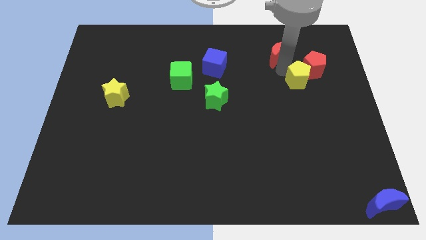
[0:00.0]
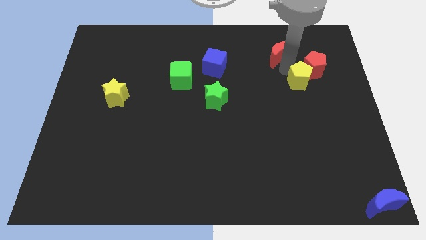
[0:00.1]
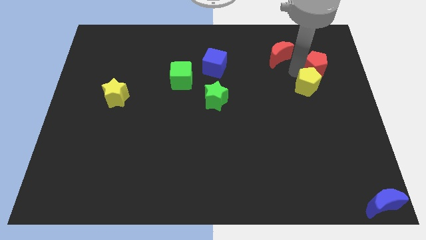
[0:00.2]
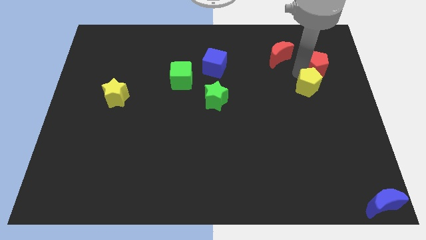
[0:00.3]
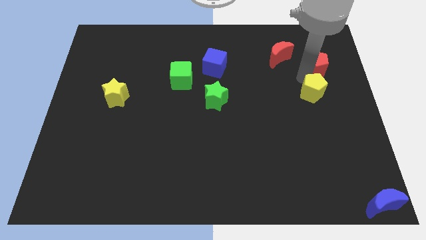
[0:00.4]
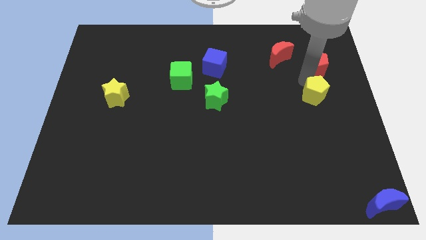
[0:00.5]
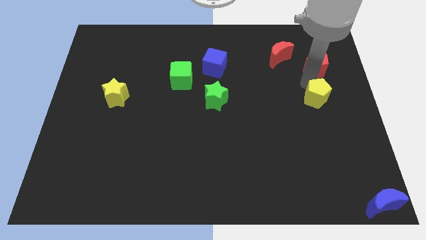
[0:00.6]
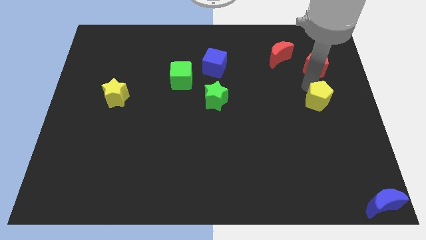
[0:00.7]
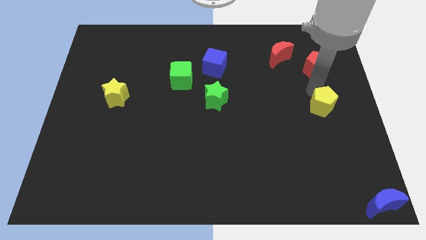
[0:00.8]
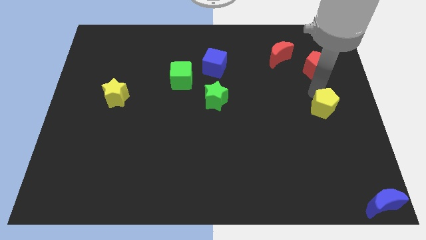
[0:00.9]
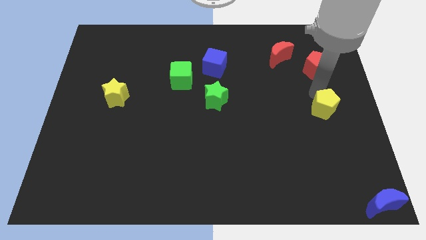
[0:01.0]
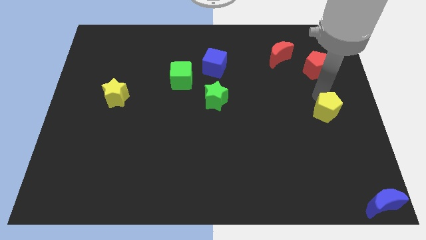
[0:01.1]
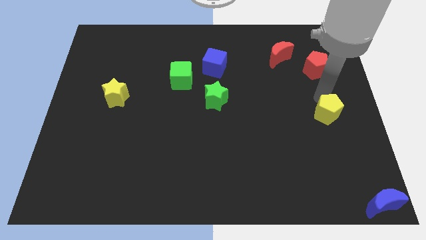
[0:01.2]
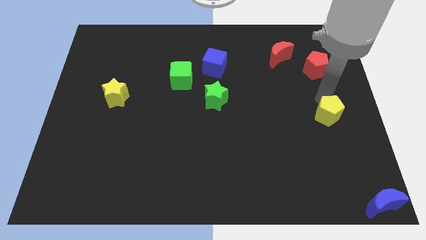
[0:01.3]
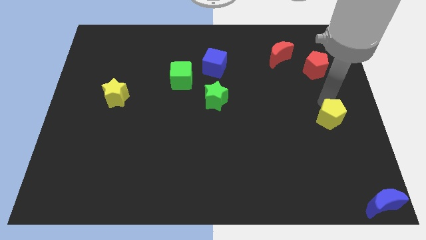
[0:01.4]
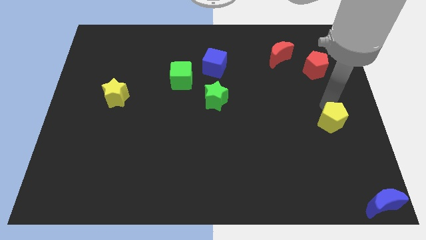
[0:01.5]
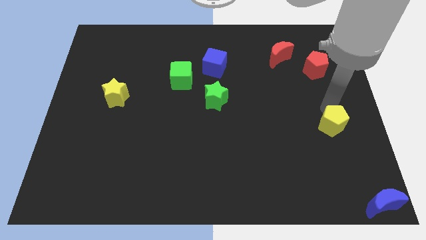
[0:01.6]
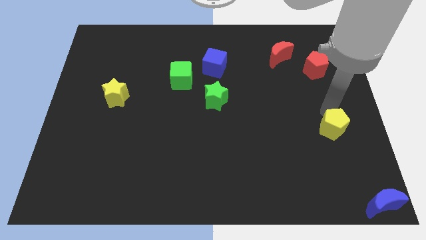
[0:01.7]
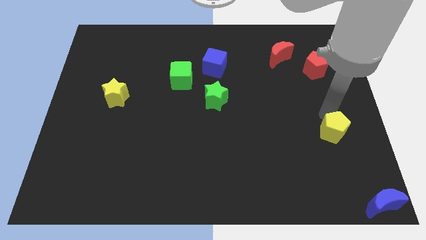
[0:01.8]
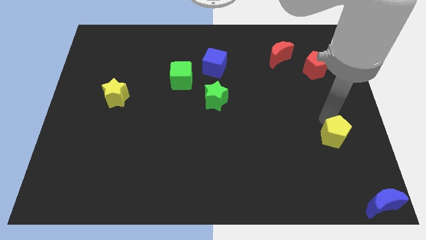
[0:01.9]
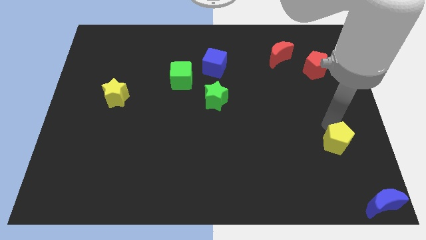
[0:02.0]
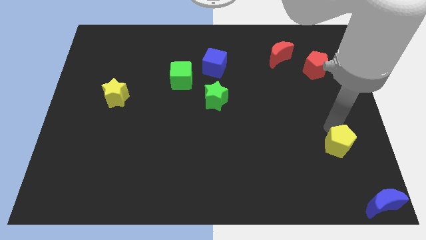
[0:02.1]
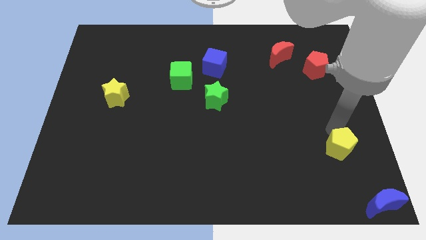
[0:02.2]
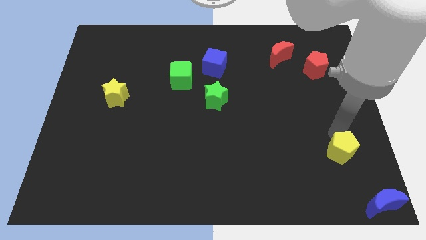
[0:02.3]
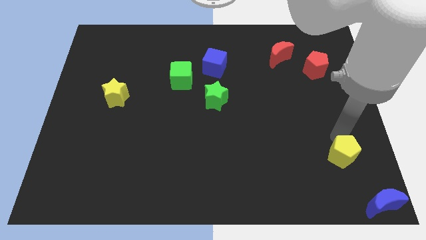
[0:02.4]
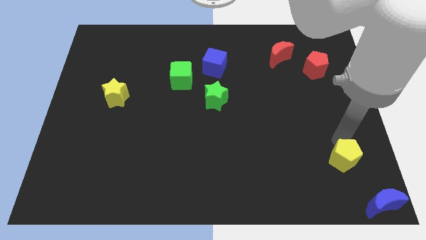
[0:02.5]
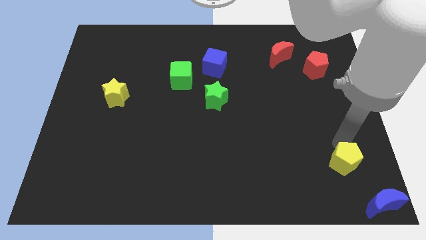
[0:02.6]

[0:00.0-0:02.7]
separate the yellow pentagon from the red pentagon

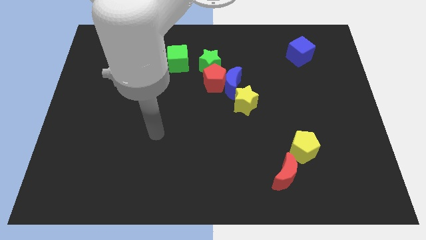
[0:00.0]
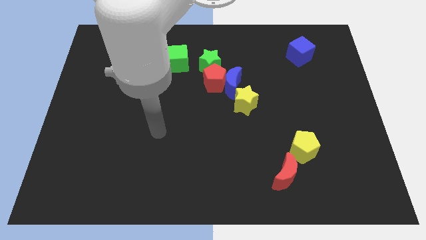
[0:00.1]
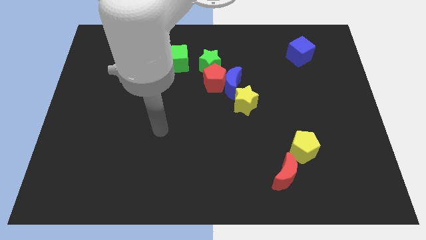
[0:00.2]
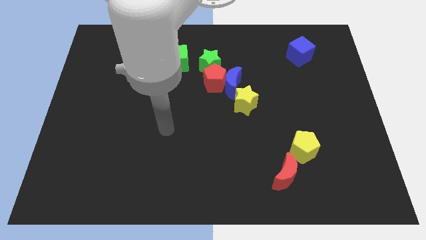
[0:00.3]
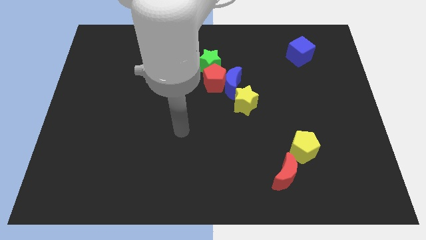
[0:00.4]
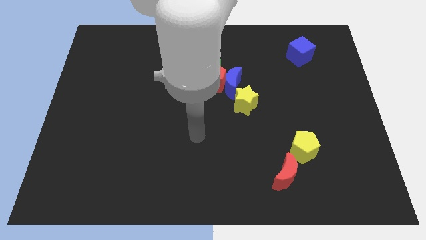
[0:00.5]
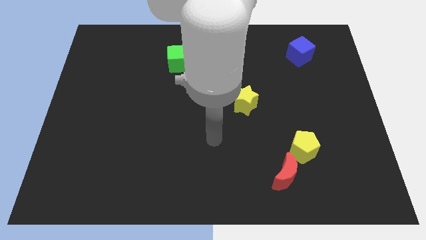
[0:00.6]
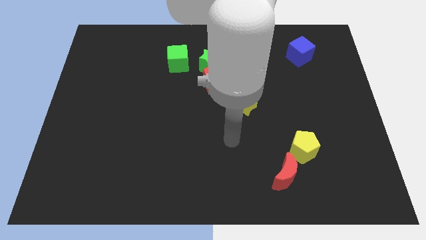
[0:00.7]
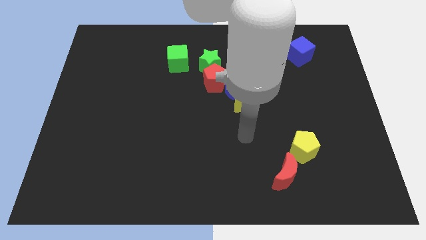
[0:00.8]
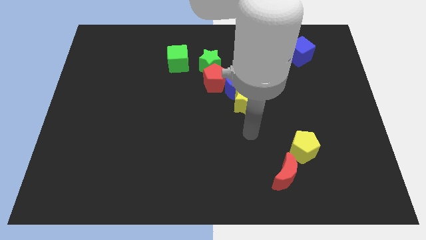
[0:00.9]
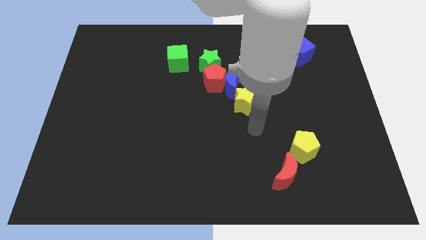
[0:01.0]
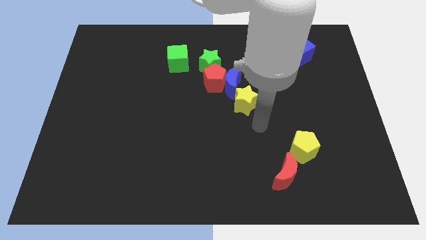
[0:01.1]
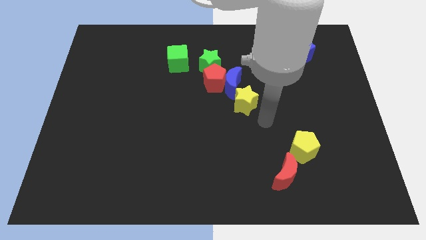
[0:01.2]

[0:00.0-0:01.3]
point your arm in between the yellow blocks

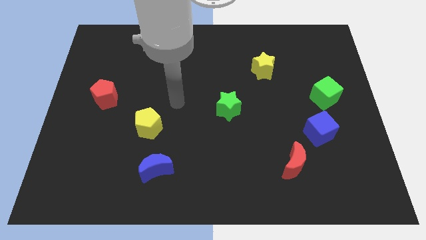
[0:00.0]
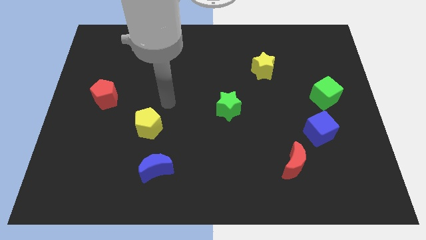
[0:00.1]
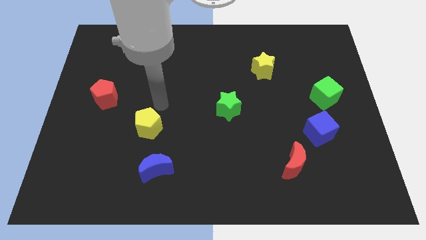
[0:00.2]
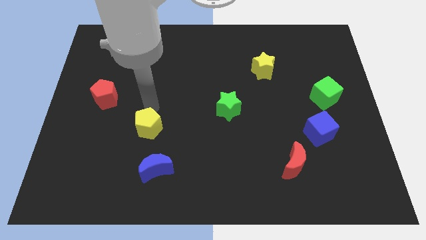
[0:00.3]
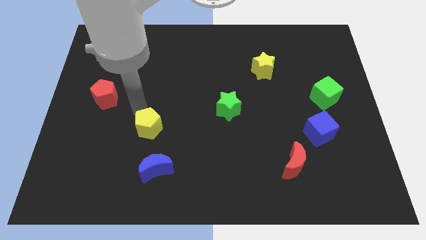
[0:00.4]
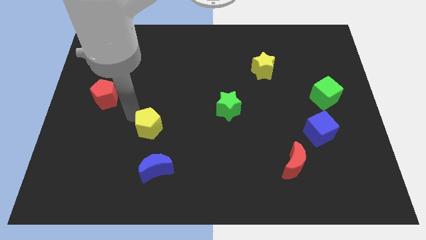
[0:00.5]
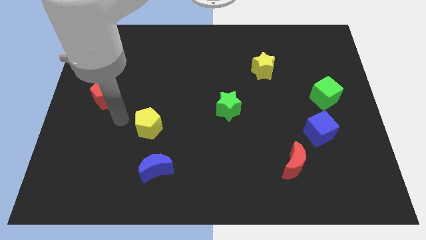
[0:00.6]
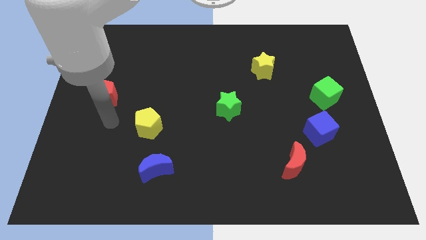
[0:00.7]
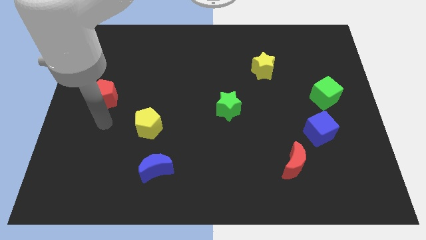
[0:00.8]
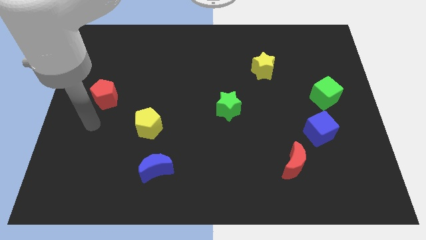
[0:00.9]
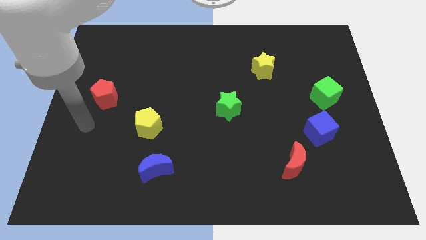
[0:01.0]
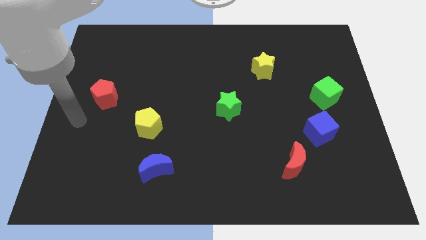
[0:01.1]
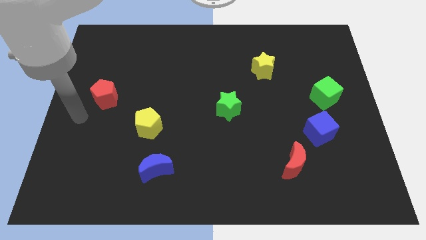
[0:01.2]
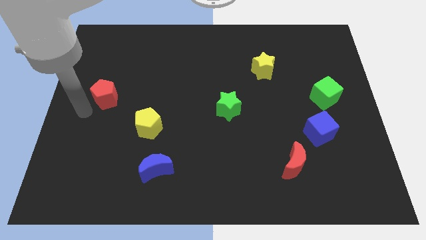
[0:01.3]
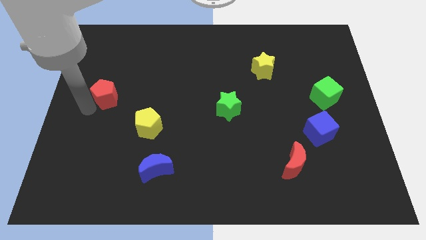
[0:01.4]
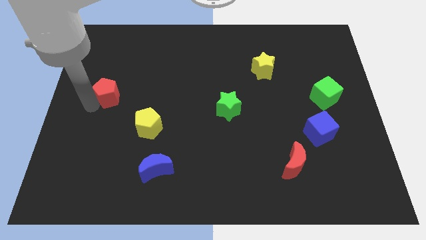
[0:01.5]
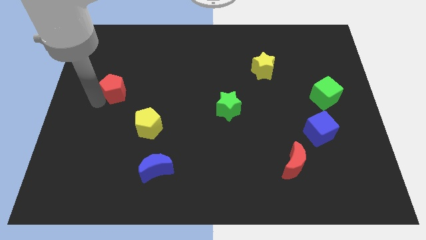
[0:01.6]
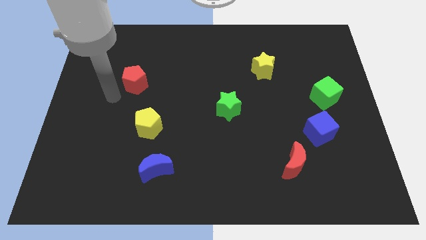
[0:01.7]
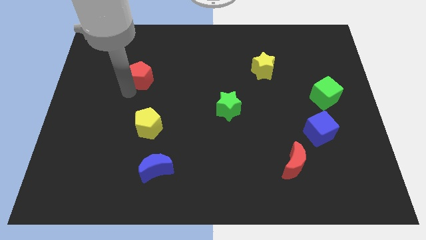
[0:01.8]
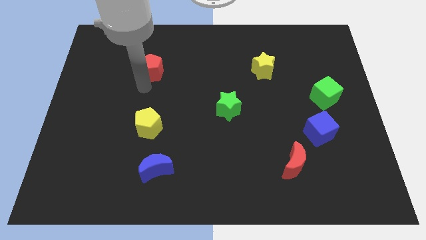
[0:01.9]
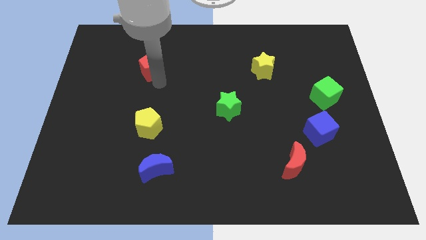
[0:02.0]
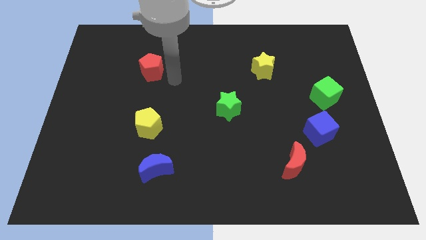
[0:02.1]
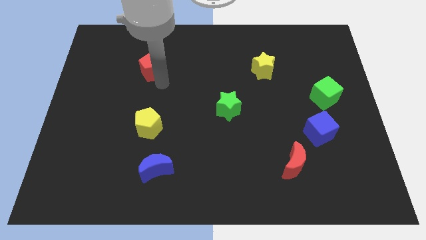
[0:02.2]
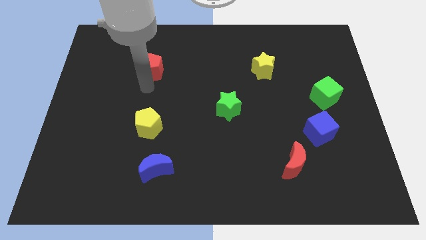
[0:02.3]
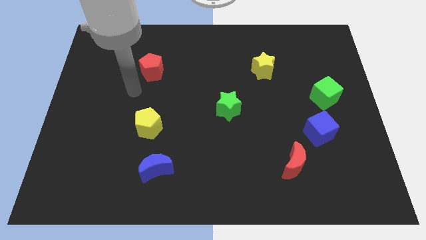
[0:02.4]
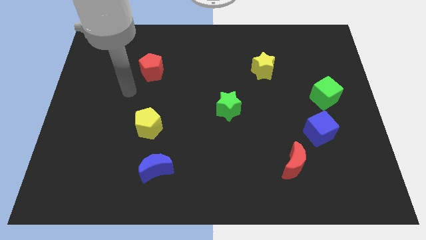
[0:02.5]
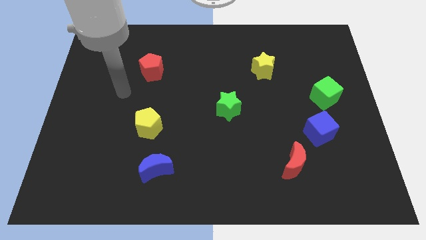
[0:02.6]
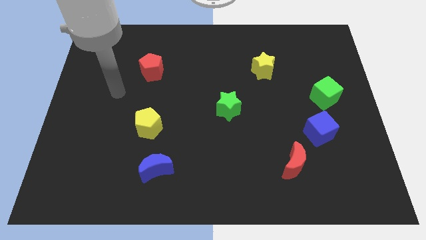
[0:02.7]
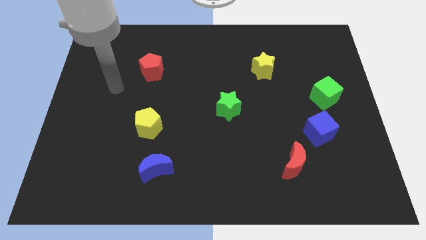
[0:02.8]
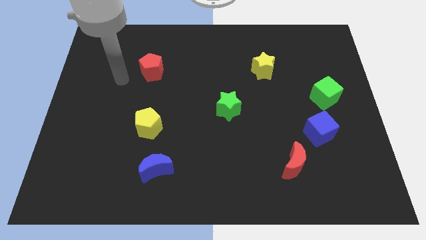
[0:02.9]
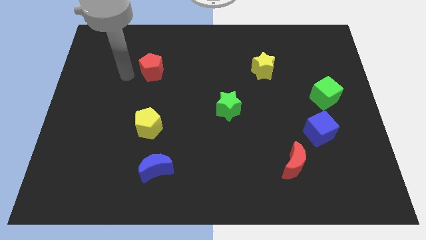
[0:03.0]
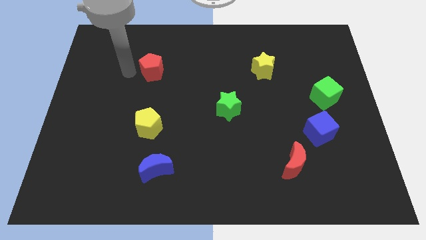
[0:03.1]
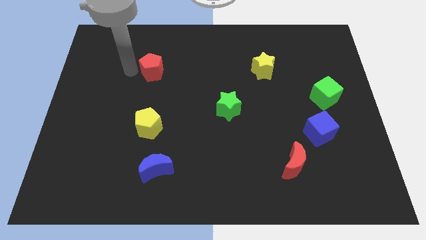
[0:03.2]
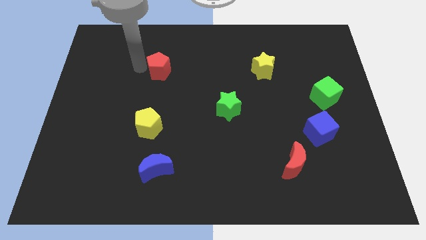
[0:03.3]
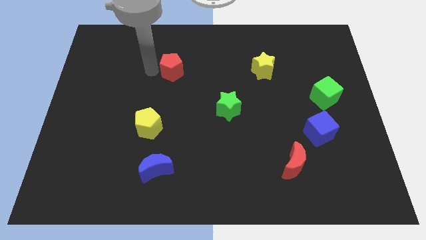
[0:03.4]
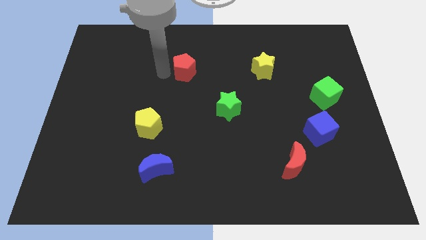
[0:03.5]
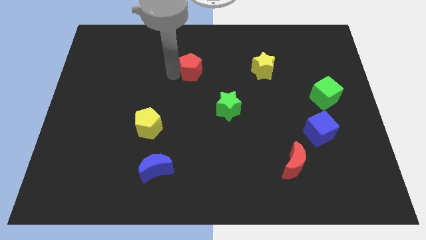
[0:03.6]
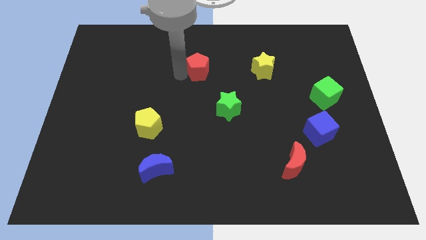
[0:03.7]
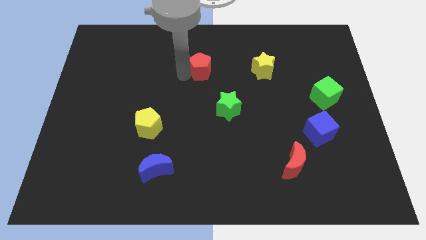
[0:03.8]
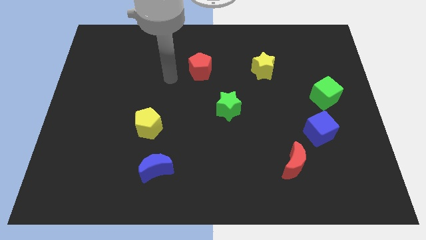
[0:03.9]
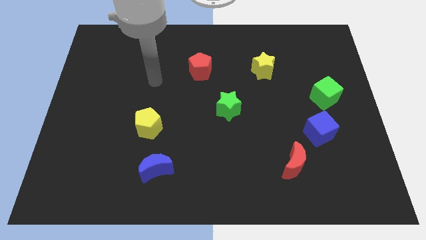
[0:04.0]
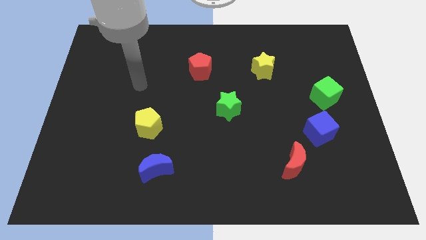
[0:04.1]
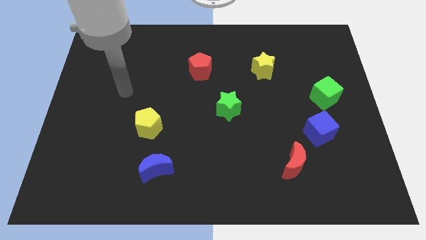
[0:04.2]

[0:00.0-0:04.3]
move the red pentagon slightly towards the yellow star

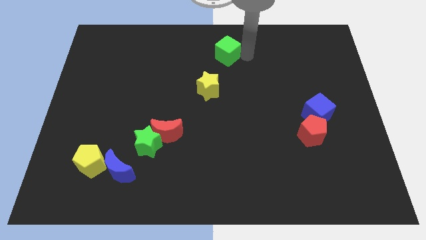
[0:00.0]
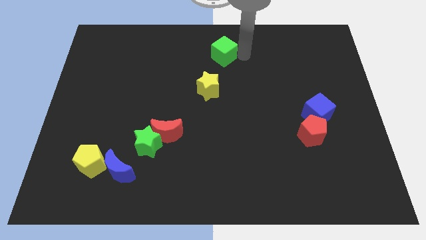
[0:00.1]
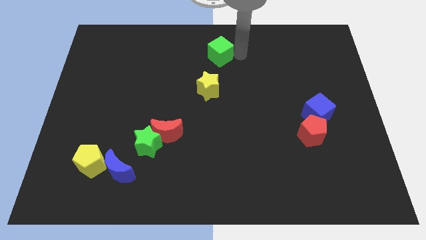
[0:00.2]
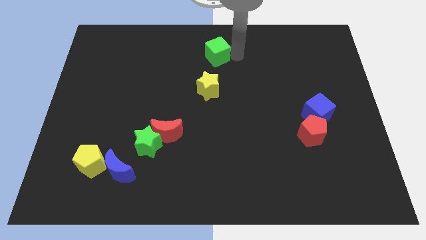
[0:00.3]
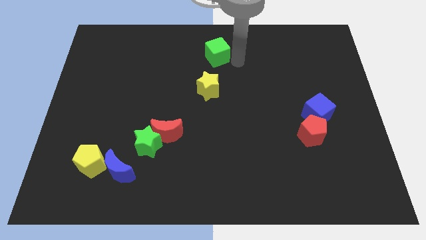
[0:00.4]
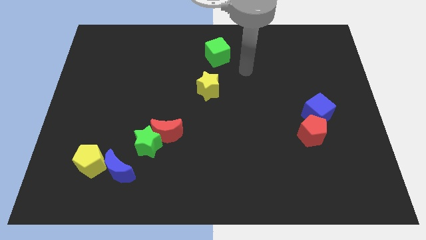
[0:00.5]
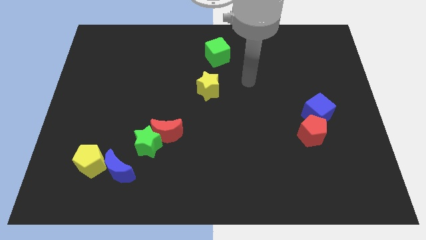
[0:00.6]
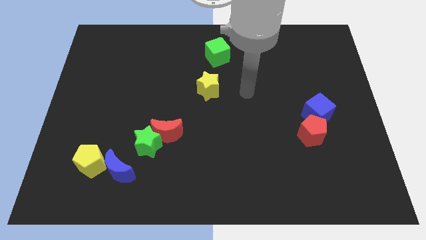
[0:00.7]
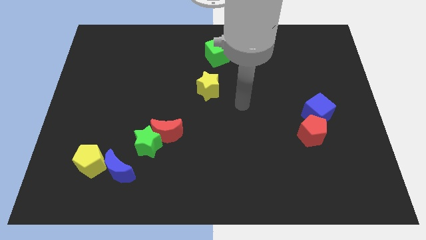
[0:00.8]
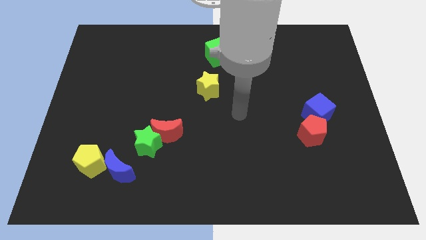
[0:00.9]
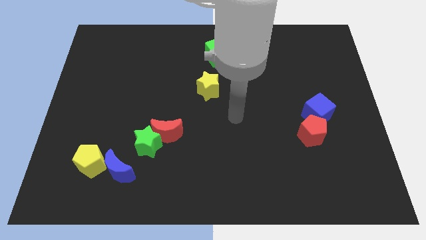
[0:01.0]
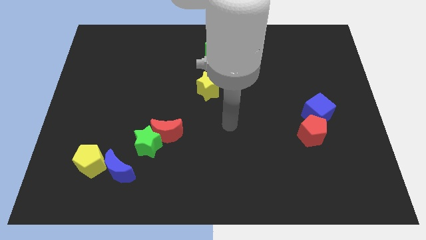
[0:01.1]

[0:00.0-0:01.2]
push the green cube vertically on top of the yellow star
